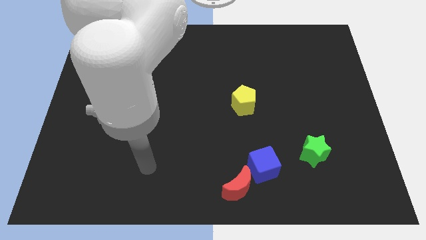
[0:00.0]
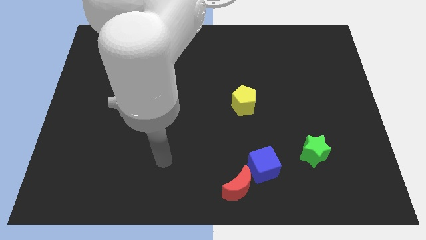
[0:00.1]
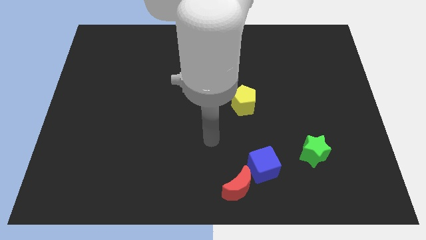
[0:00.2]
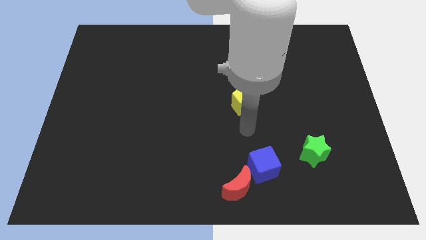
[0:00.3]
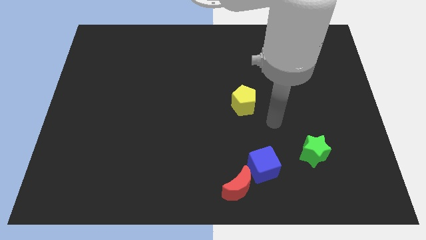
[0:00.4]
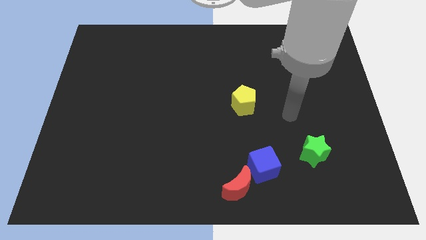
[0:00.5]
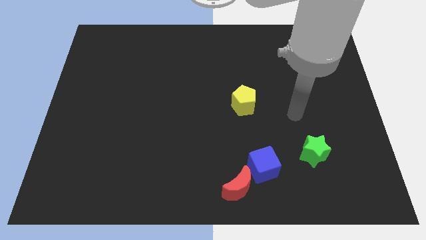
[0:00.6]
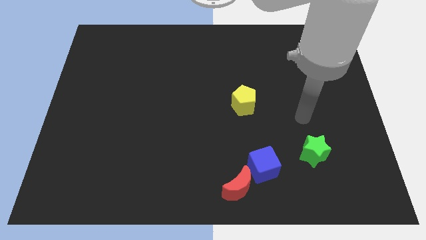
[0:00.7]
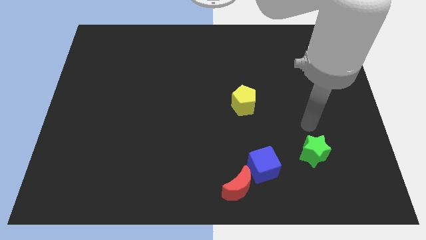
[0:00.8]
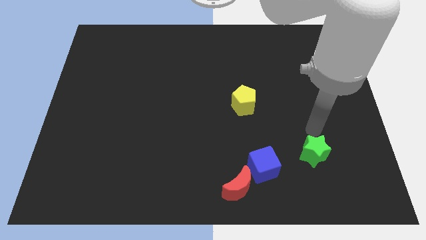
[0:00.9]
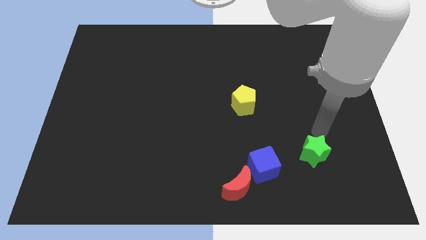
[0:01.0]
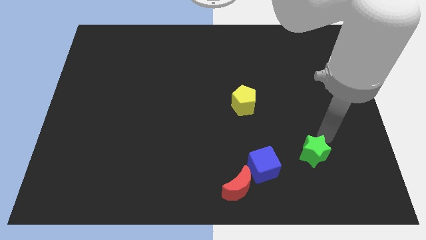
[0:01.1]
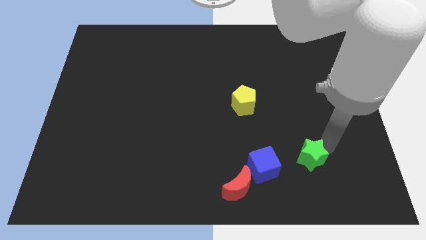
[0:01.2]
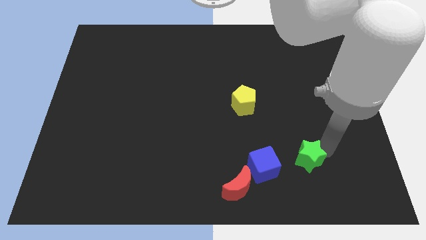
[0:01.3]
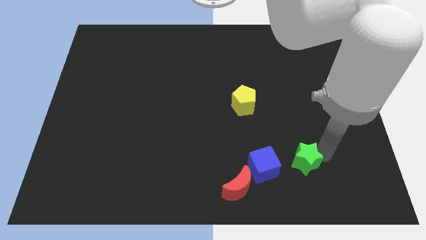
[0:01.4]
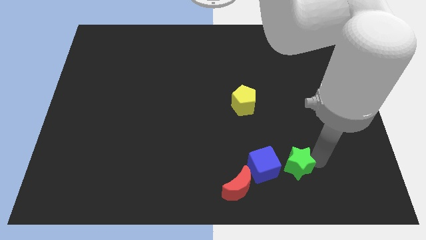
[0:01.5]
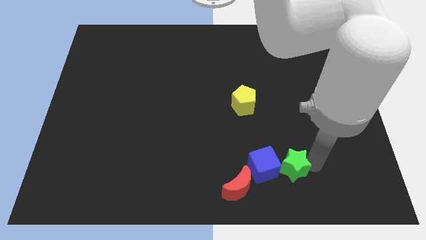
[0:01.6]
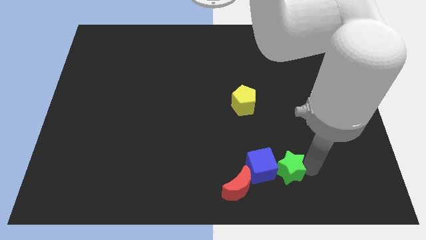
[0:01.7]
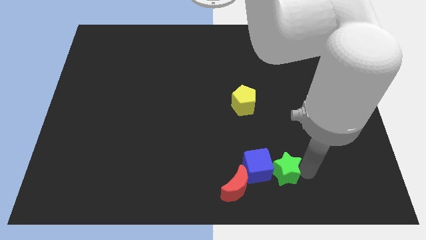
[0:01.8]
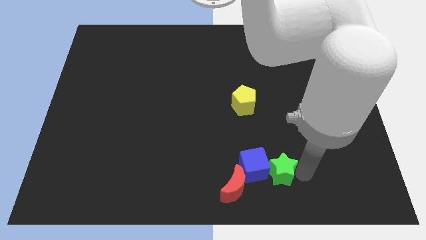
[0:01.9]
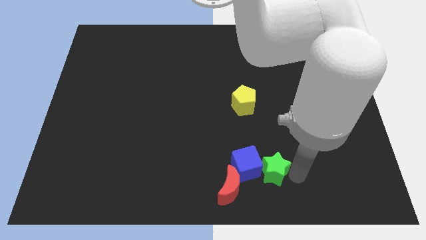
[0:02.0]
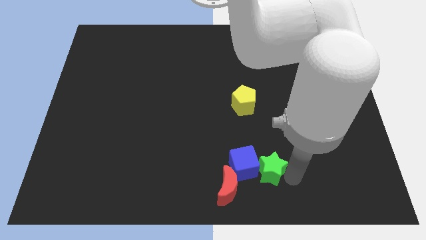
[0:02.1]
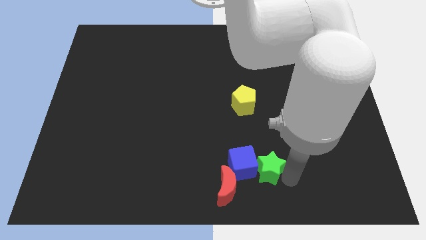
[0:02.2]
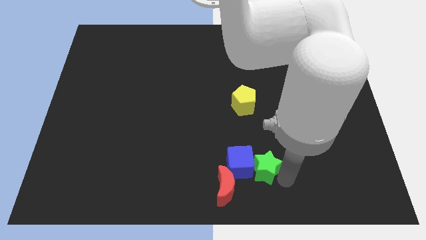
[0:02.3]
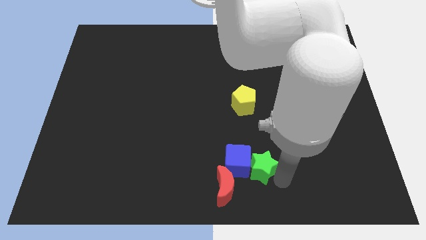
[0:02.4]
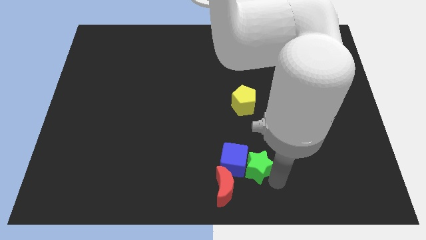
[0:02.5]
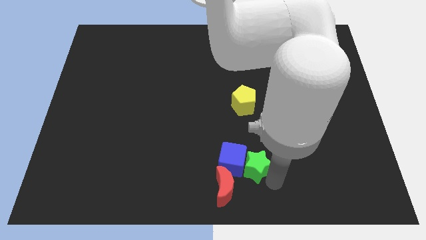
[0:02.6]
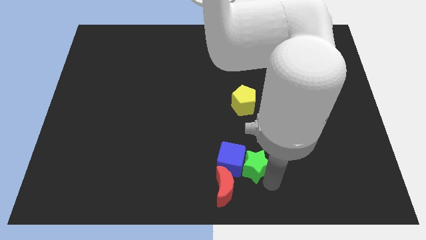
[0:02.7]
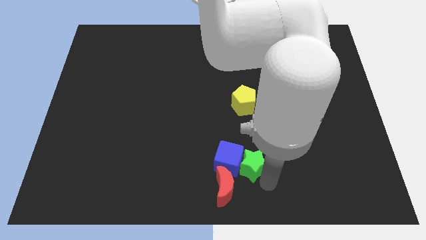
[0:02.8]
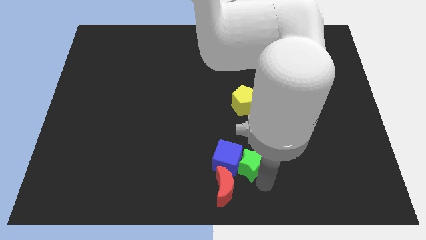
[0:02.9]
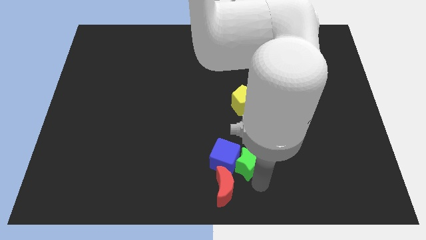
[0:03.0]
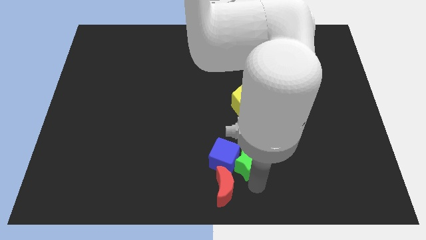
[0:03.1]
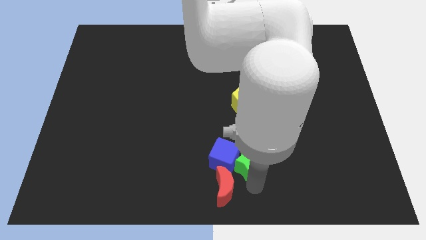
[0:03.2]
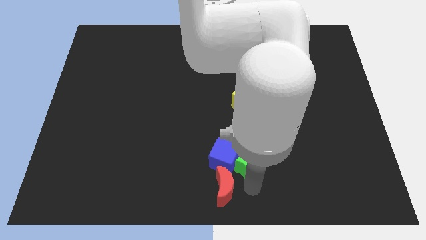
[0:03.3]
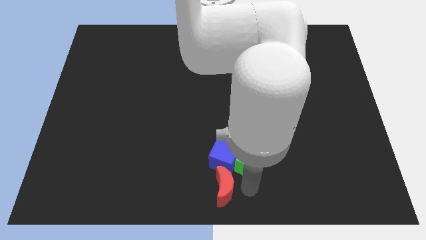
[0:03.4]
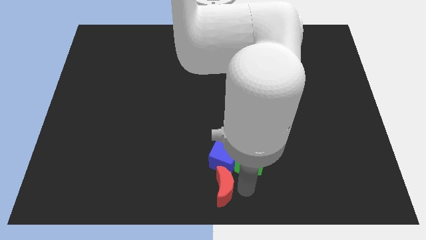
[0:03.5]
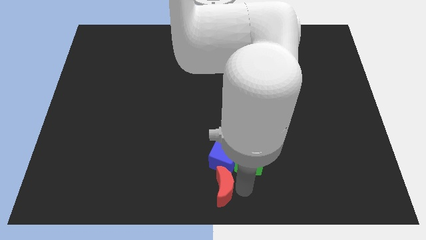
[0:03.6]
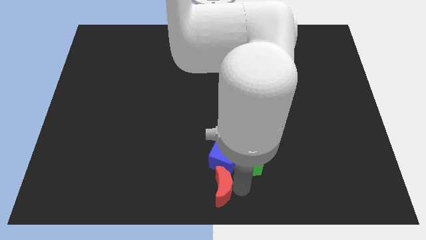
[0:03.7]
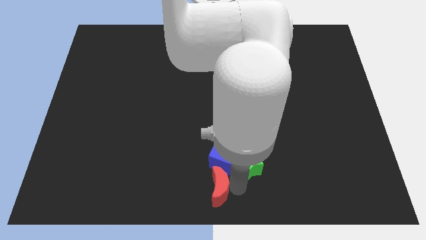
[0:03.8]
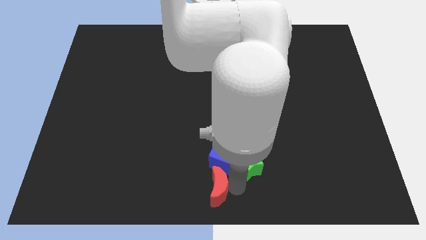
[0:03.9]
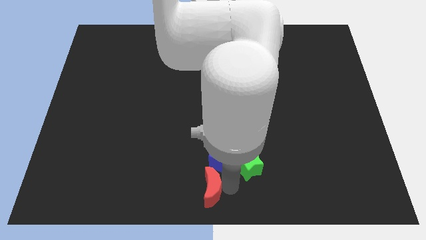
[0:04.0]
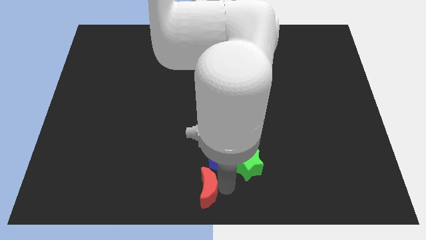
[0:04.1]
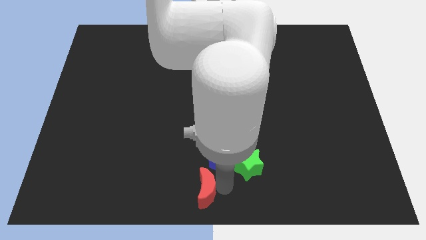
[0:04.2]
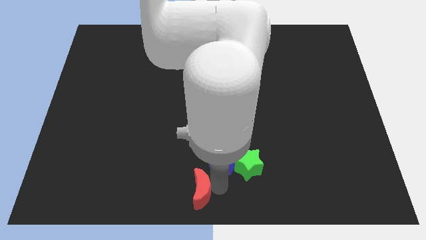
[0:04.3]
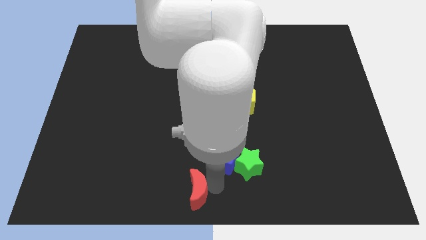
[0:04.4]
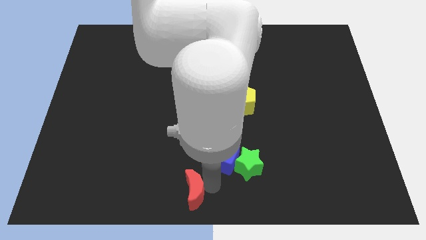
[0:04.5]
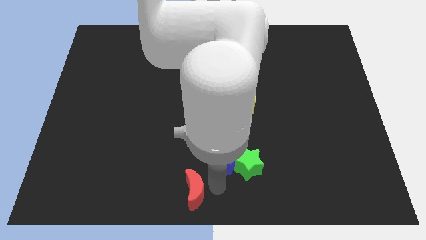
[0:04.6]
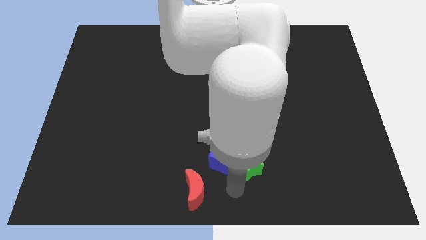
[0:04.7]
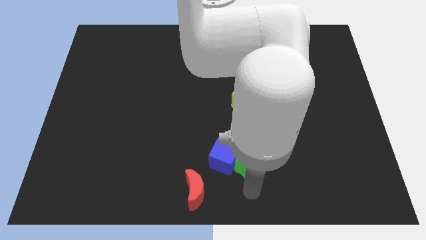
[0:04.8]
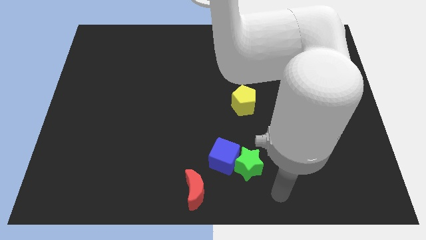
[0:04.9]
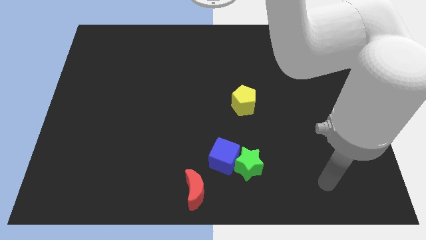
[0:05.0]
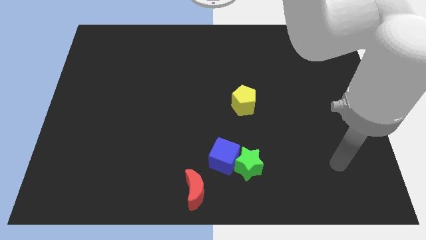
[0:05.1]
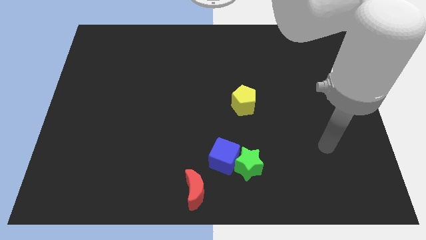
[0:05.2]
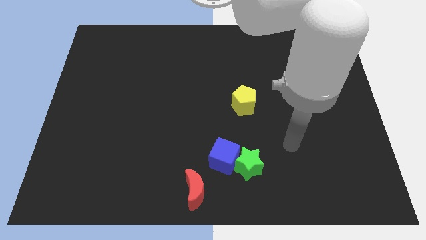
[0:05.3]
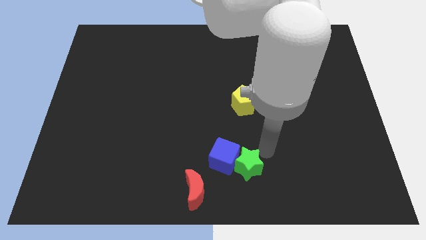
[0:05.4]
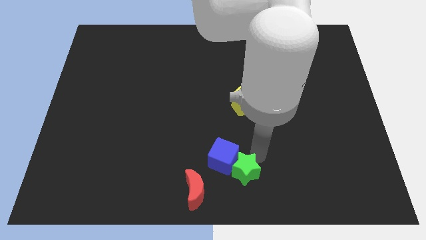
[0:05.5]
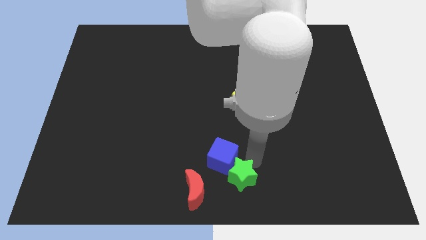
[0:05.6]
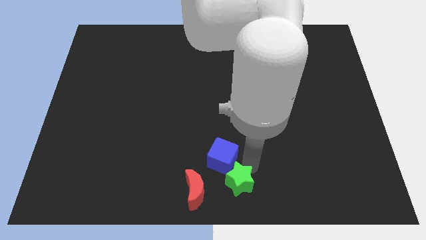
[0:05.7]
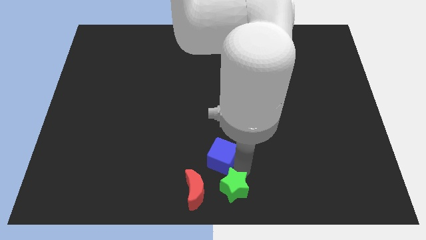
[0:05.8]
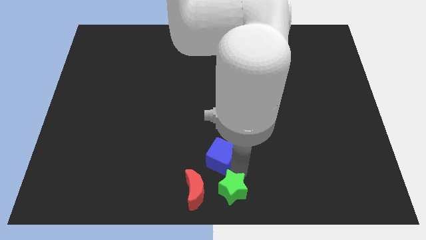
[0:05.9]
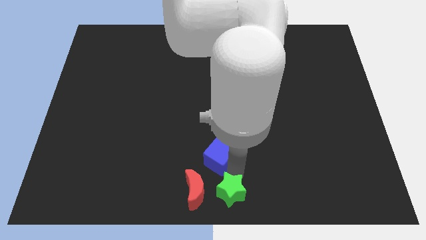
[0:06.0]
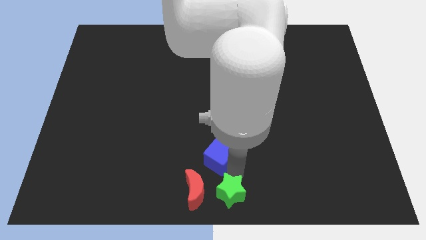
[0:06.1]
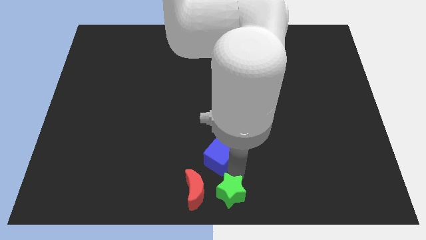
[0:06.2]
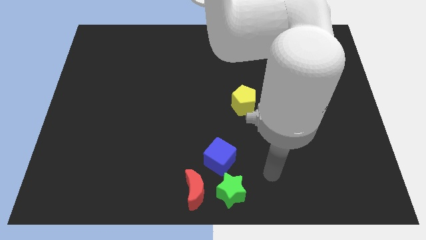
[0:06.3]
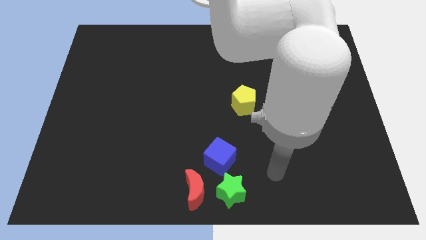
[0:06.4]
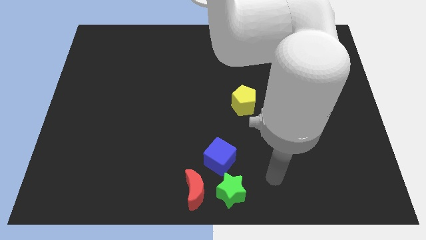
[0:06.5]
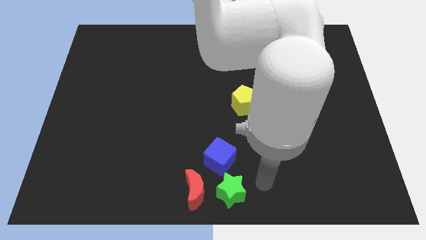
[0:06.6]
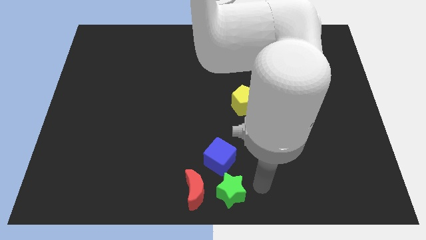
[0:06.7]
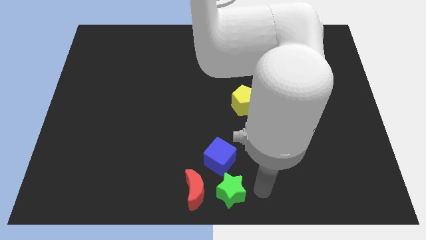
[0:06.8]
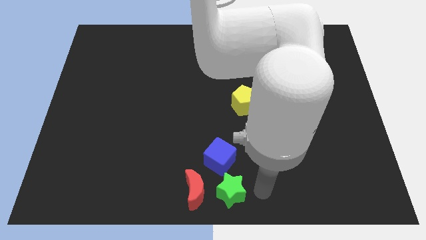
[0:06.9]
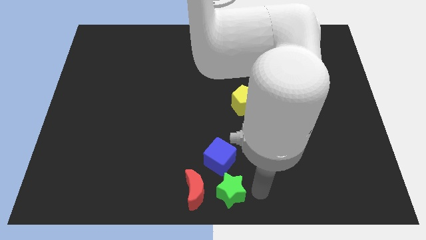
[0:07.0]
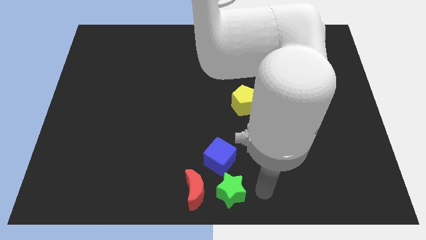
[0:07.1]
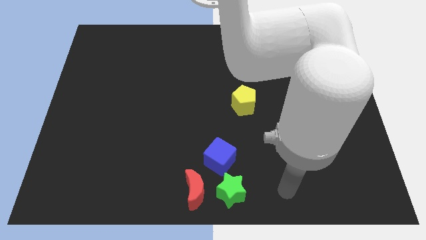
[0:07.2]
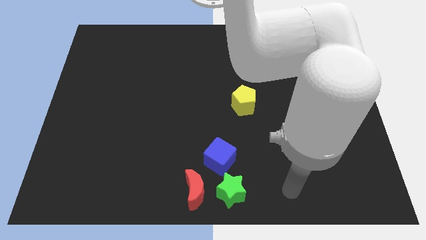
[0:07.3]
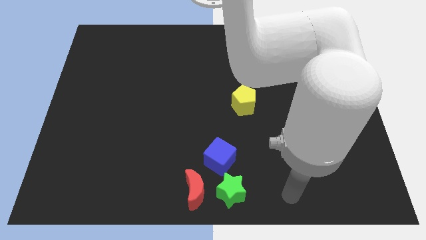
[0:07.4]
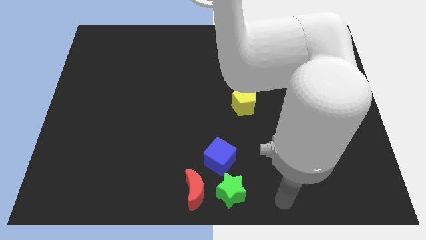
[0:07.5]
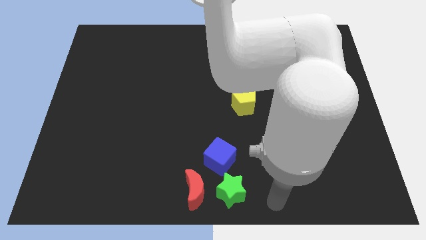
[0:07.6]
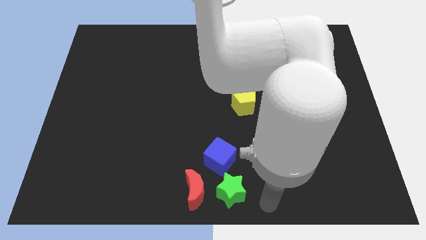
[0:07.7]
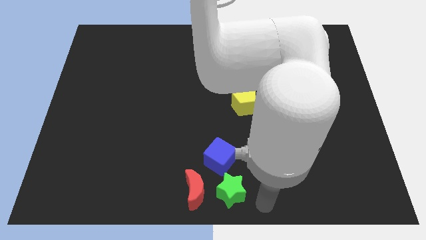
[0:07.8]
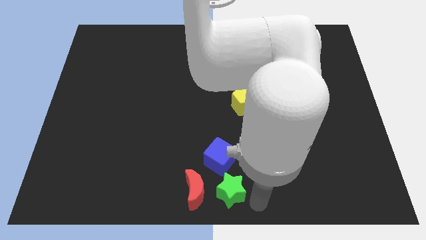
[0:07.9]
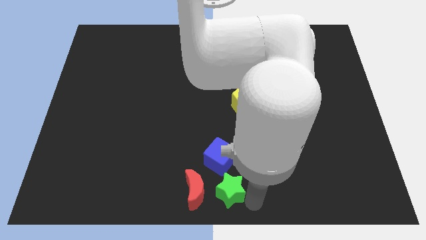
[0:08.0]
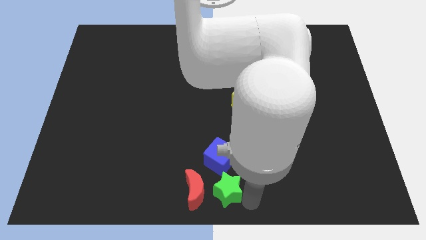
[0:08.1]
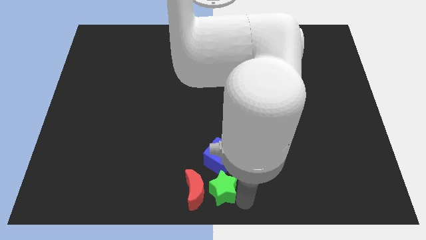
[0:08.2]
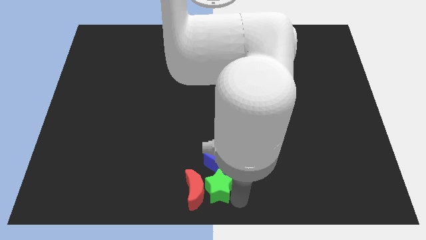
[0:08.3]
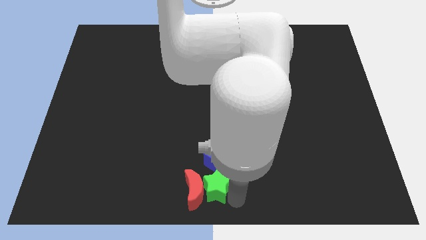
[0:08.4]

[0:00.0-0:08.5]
put the green star next to the red block
